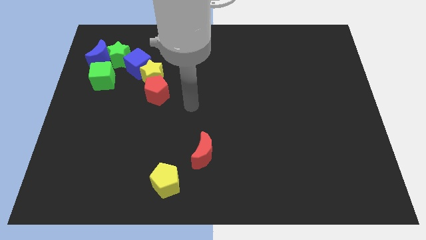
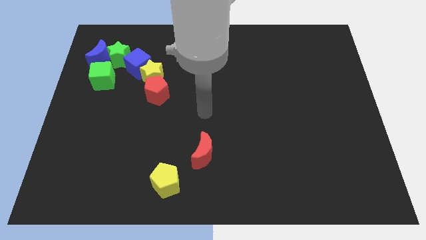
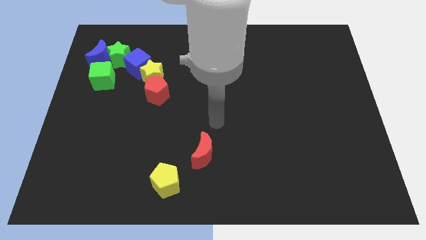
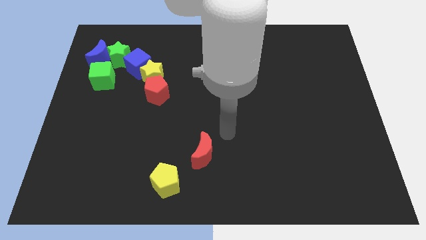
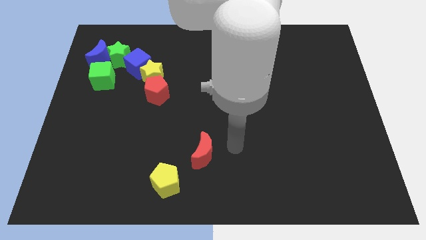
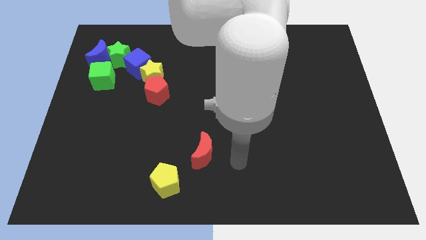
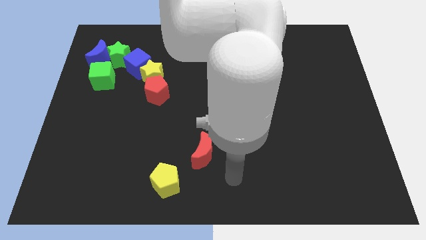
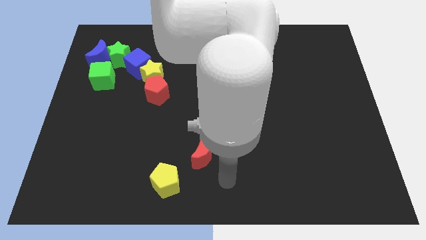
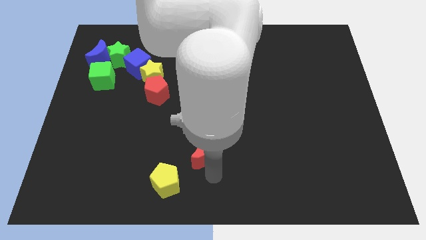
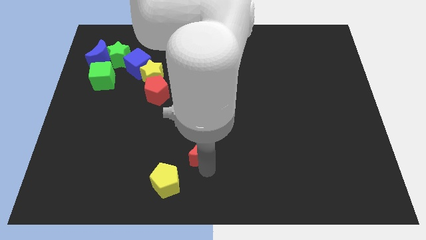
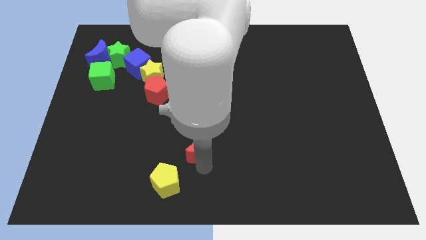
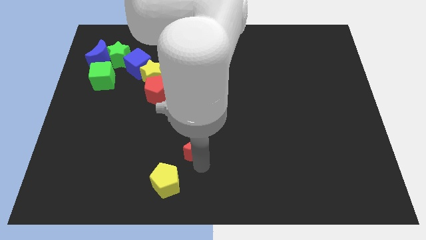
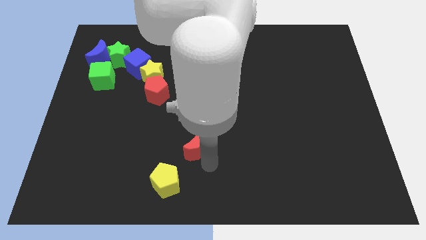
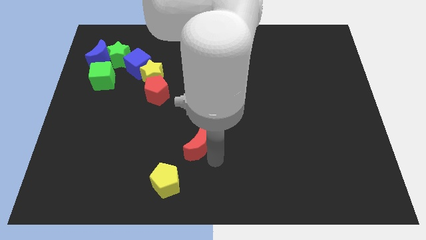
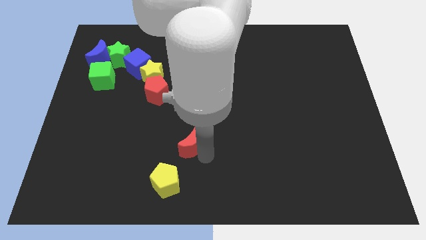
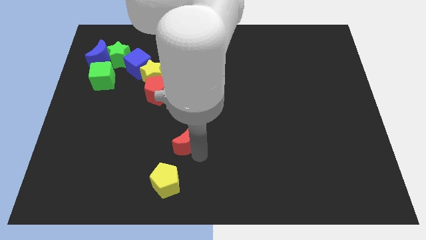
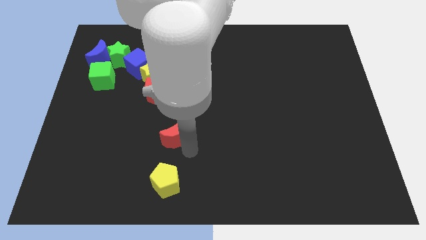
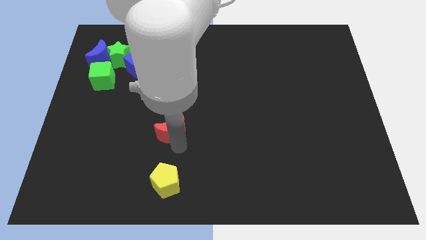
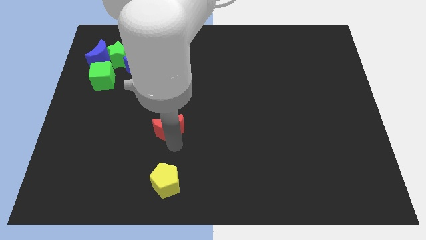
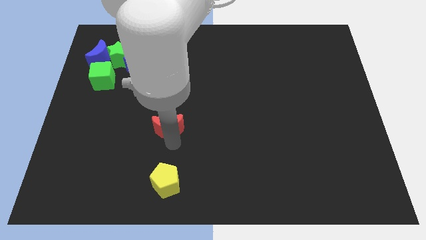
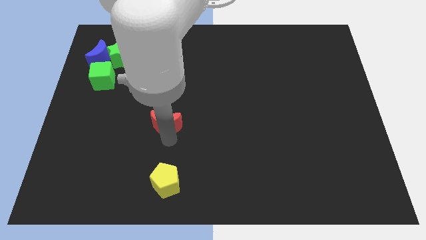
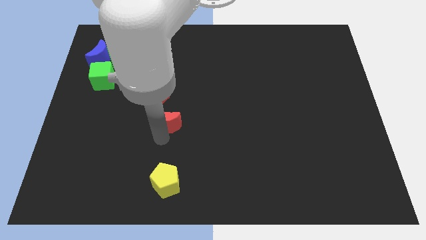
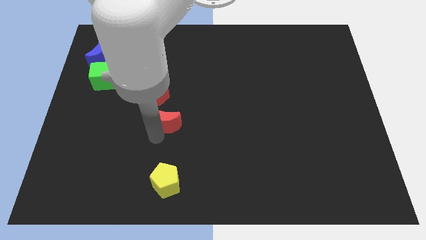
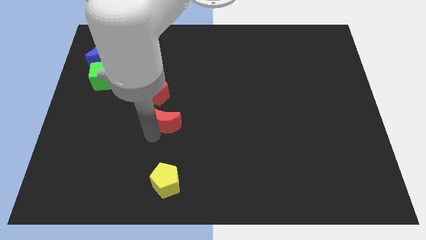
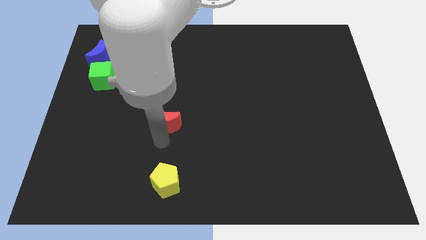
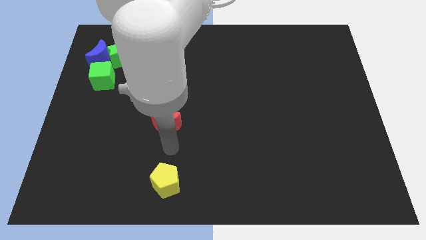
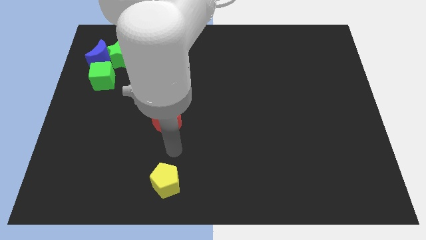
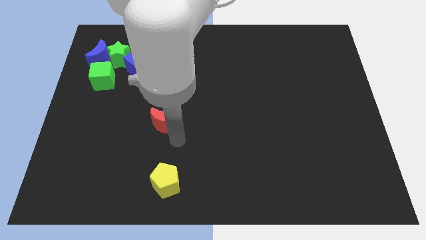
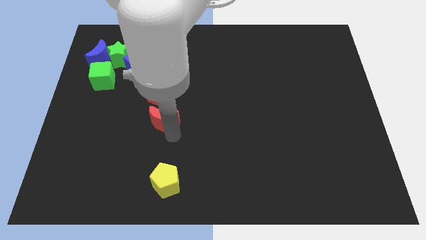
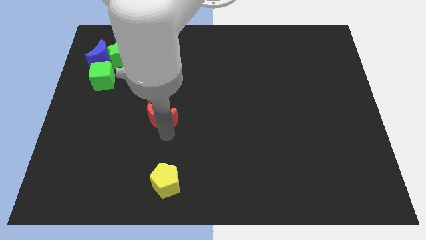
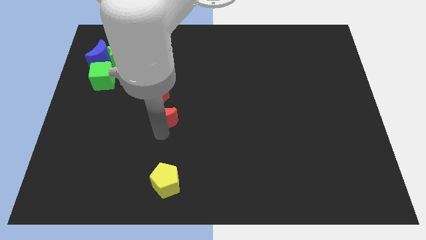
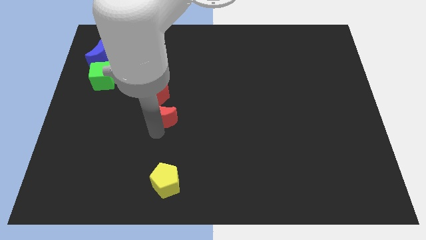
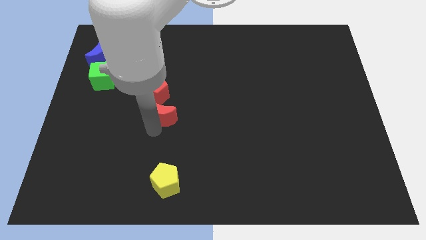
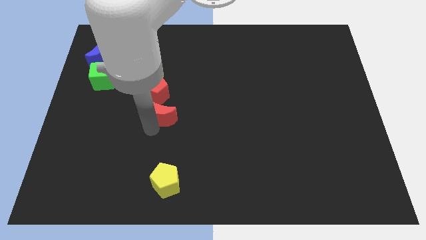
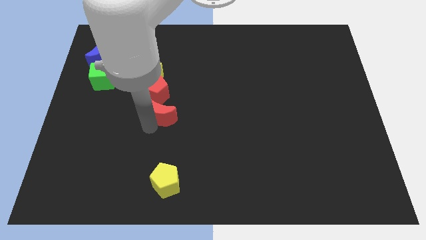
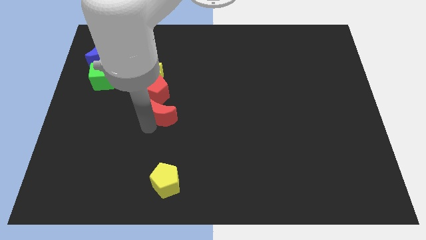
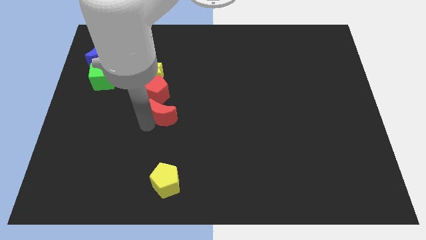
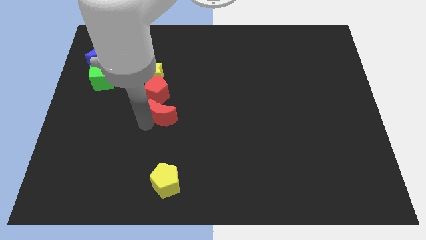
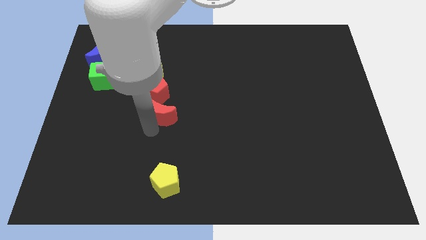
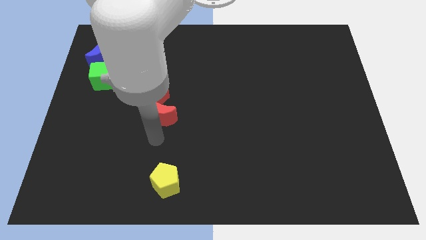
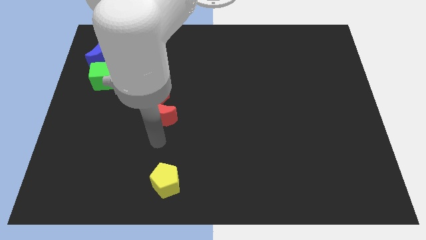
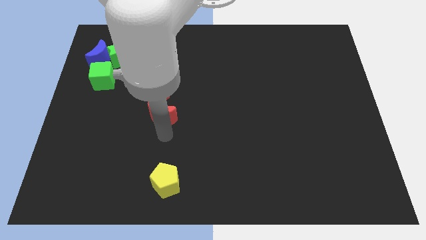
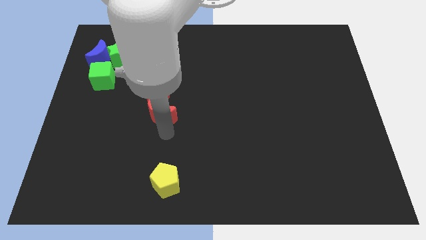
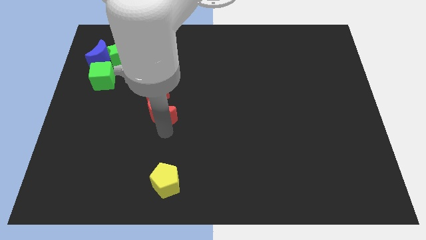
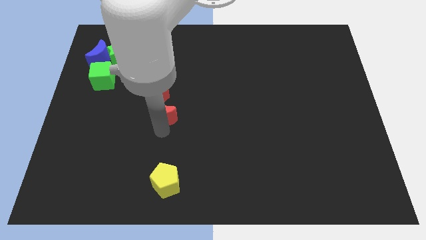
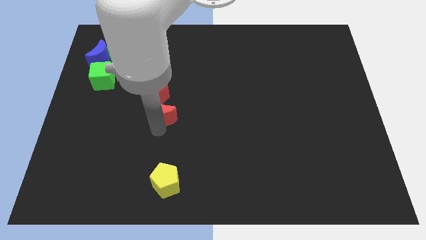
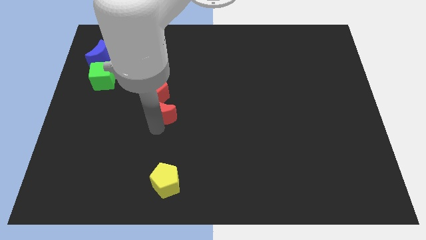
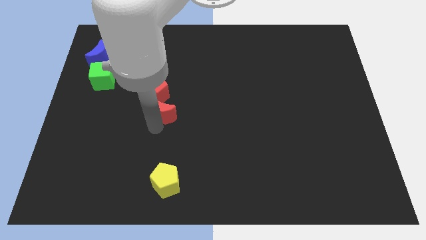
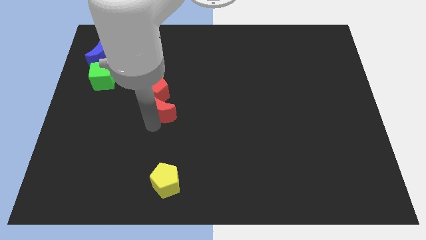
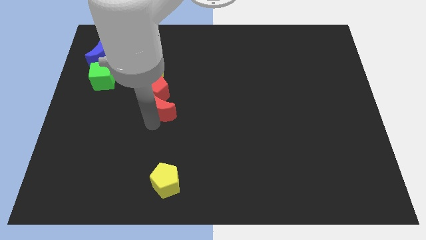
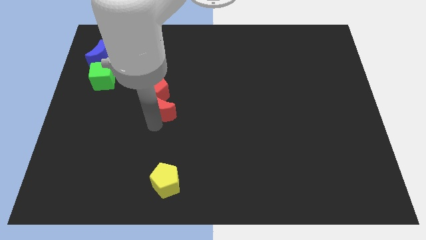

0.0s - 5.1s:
drag the red moon into the bottom side of the red pentagon

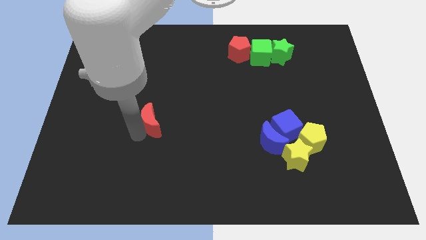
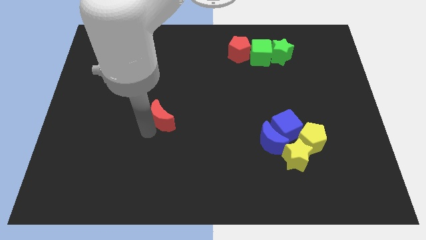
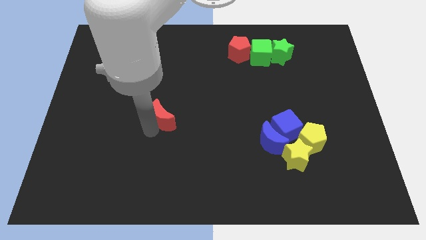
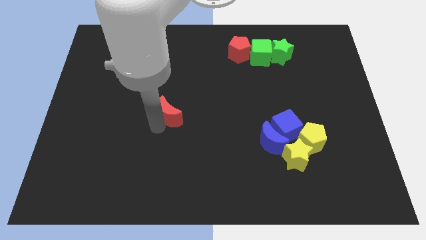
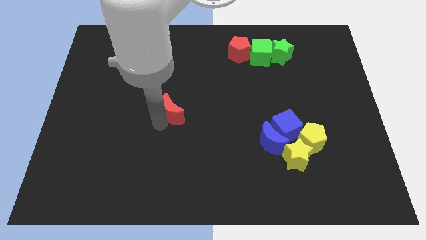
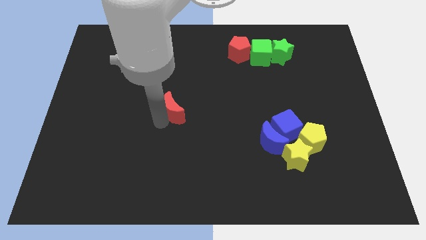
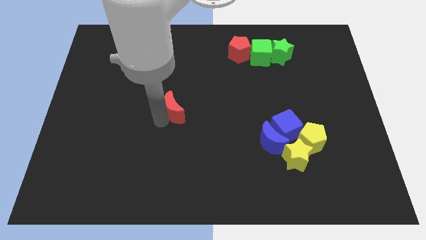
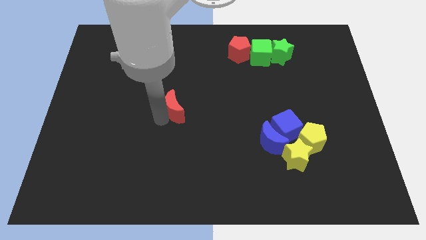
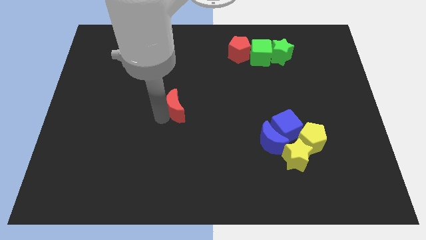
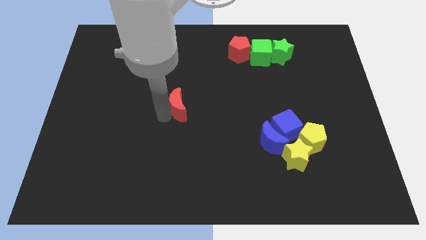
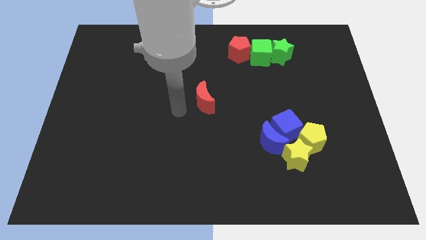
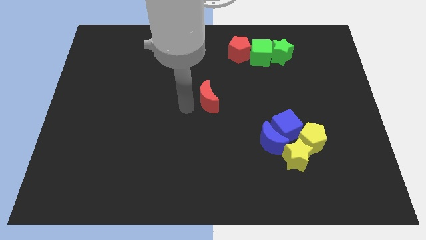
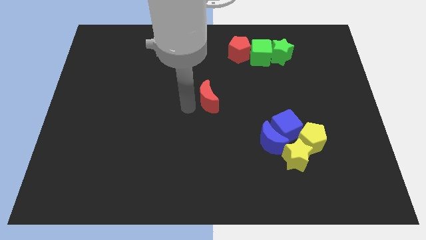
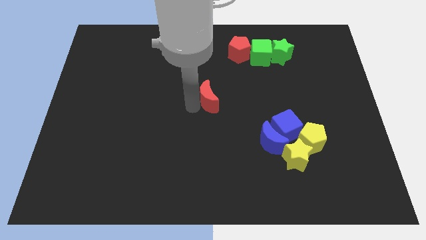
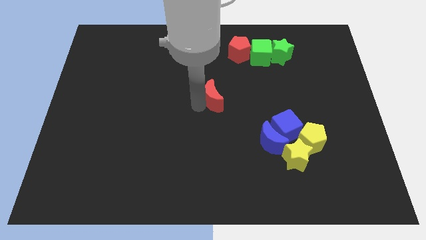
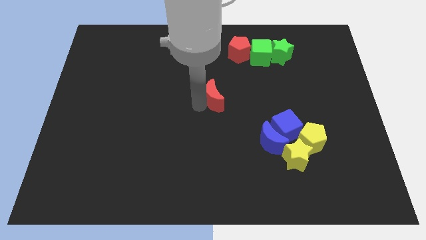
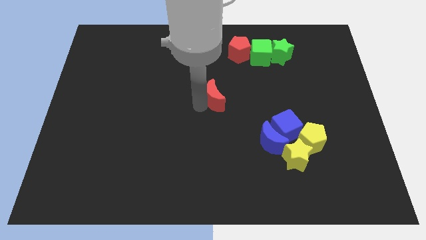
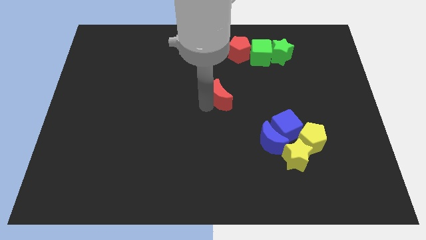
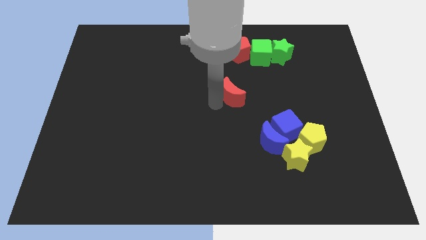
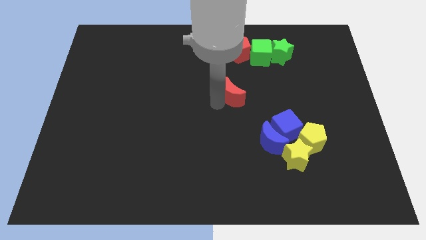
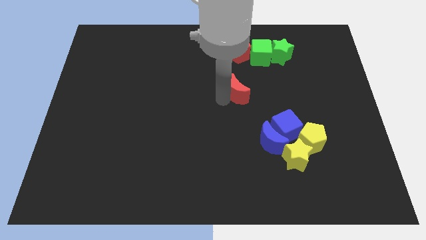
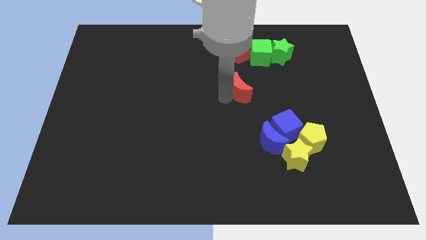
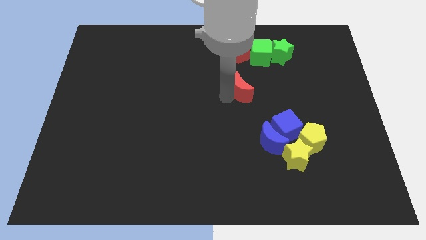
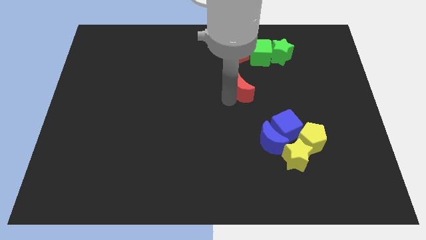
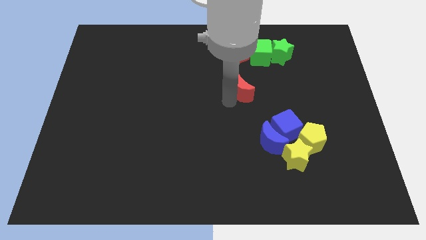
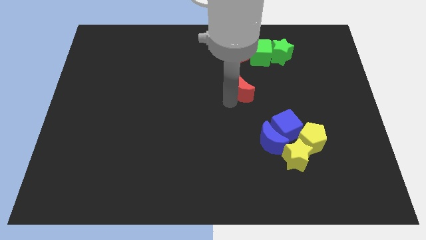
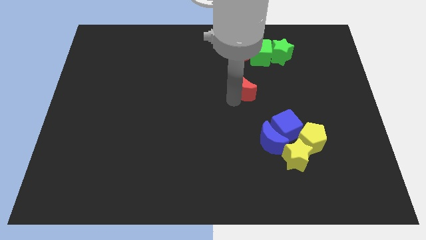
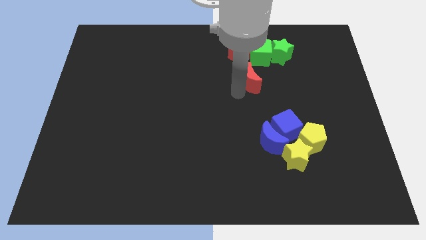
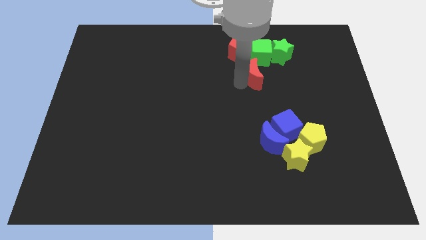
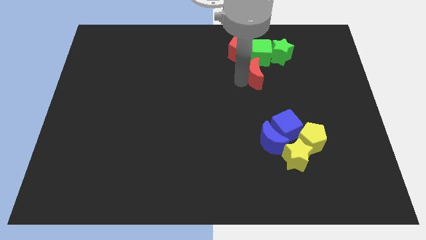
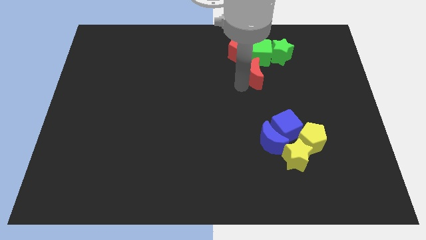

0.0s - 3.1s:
push the red moon to the bottom side of the green cube

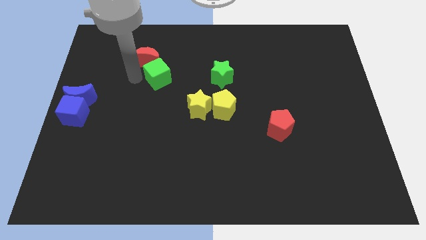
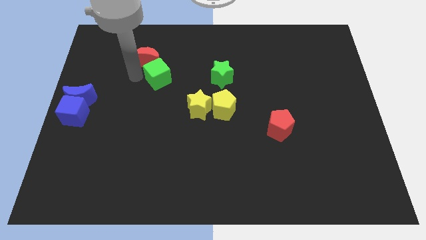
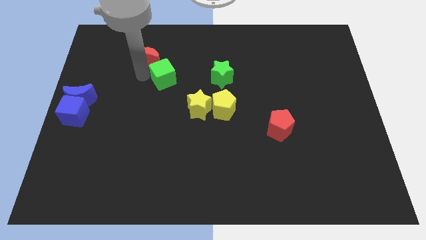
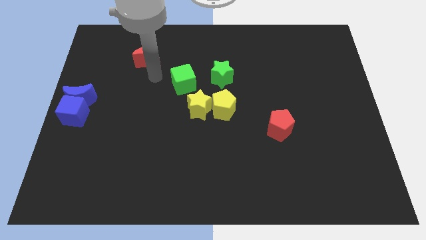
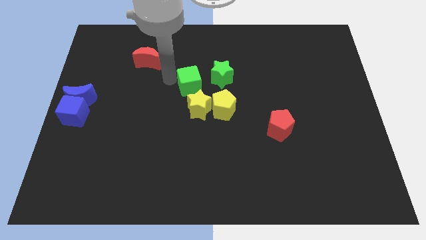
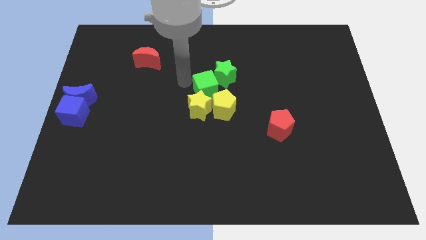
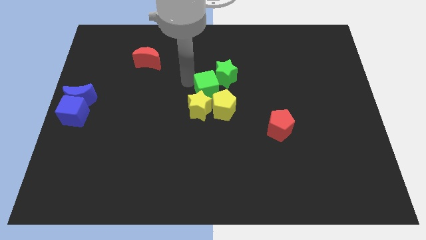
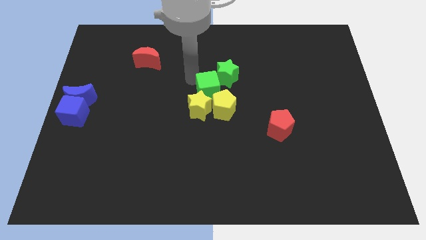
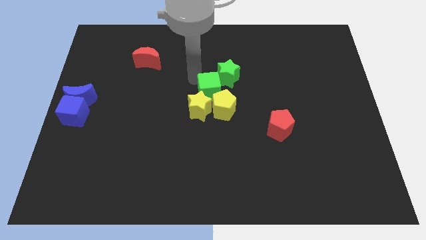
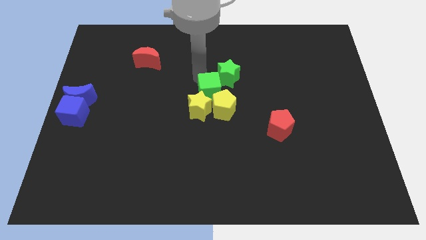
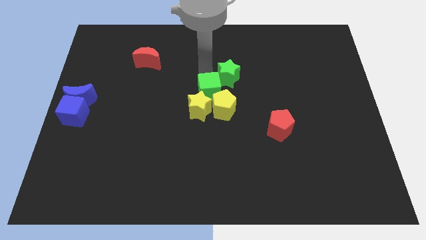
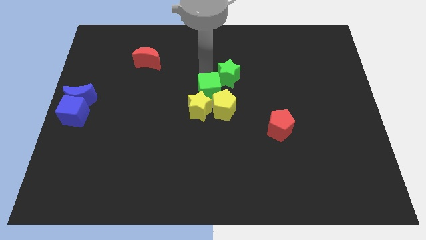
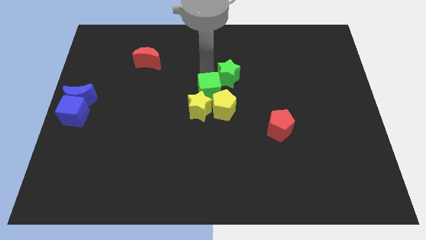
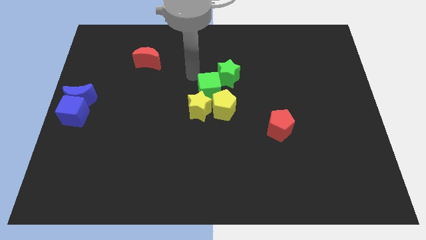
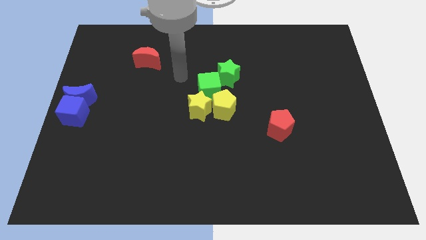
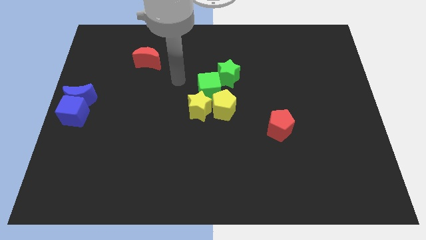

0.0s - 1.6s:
put the green cube into the green star
